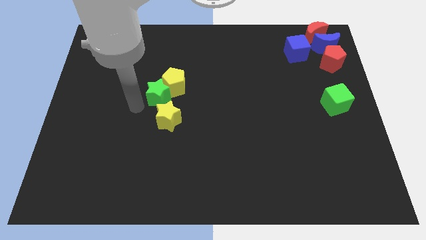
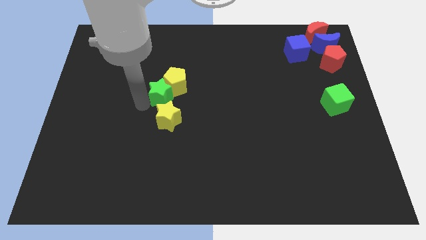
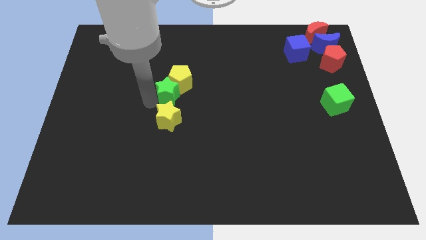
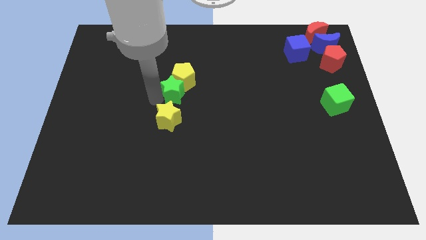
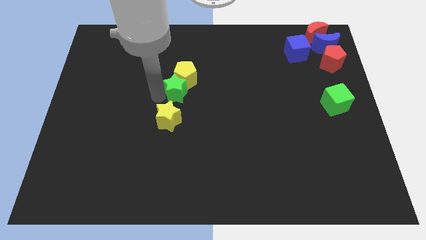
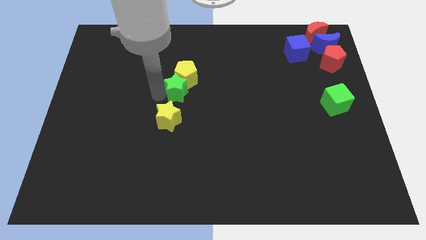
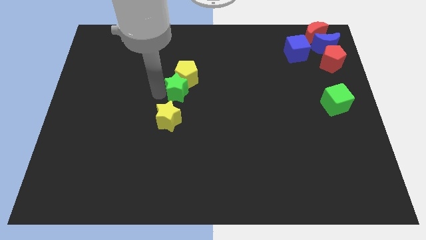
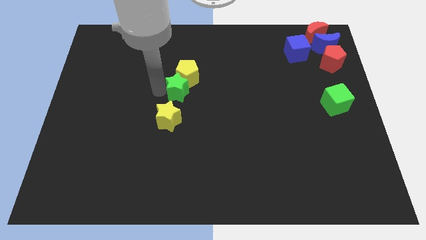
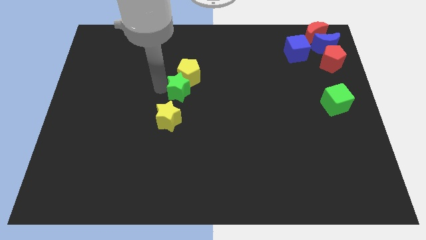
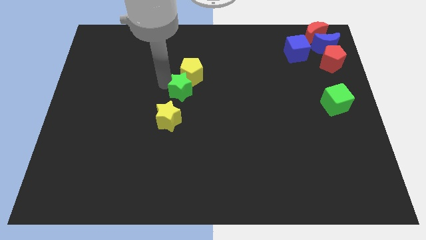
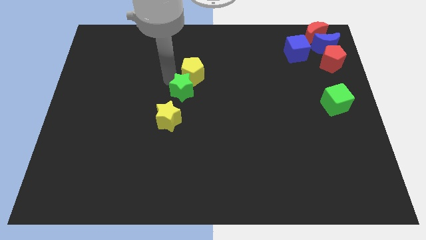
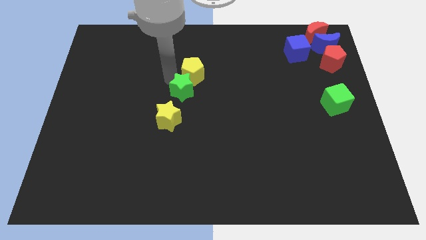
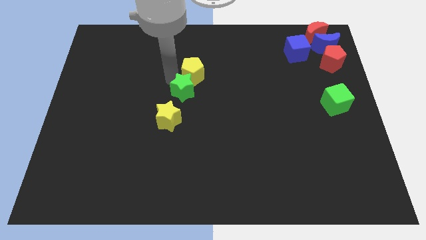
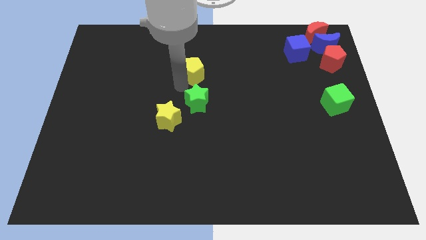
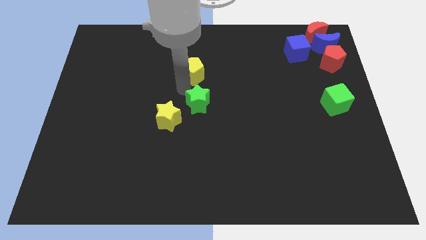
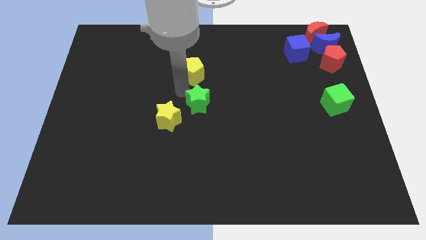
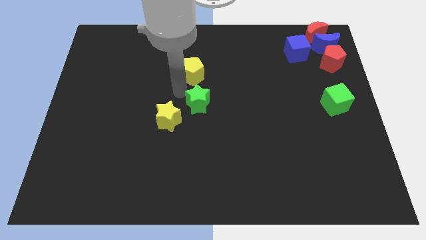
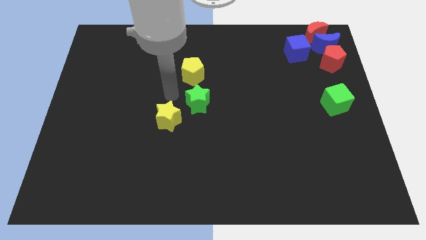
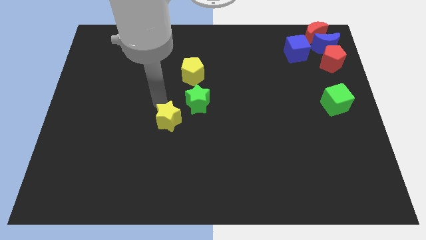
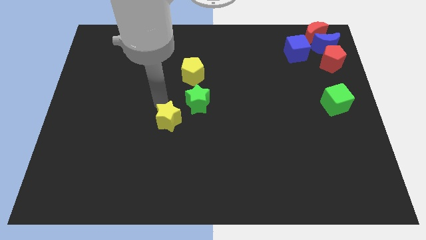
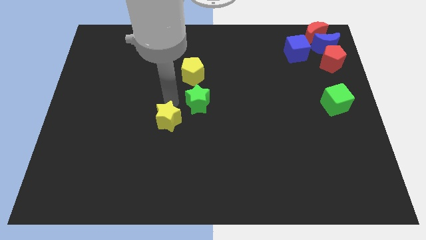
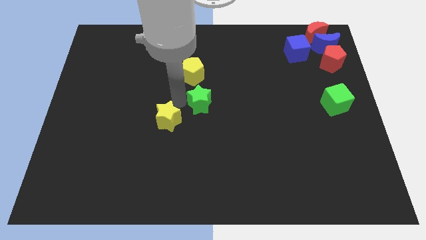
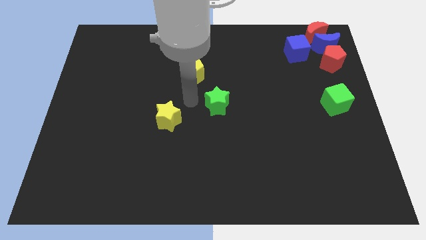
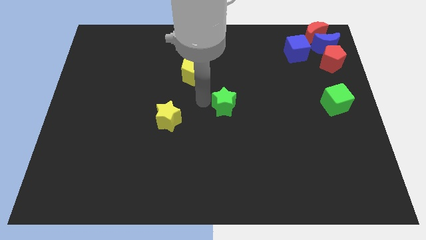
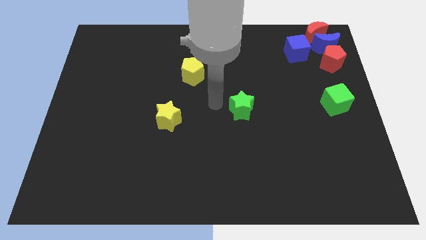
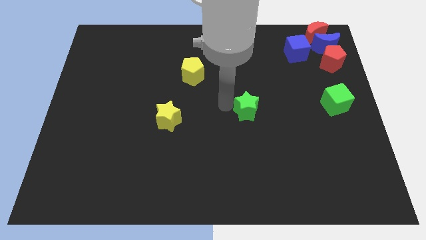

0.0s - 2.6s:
separate the green star from the yellow color blocks

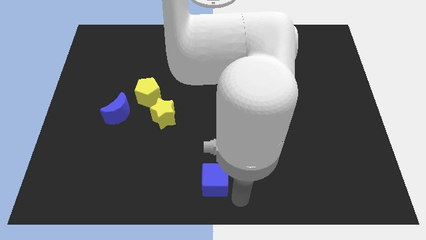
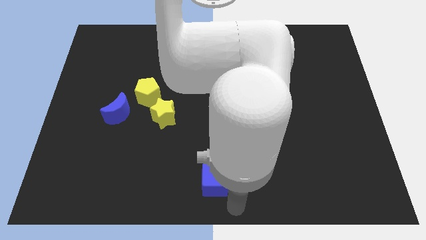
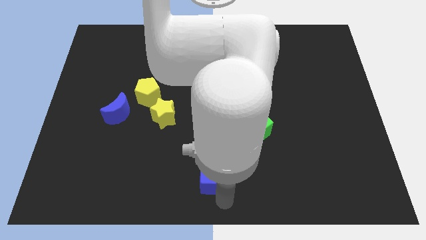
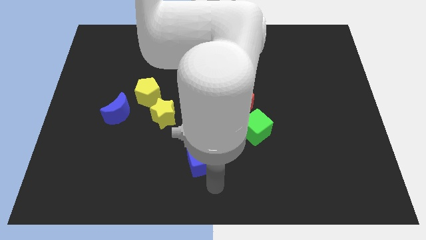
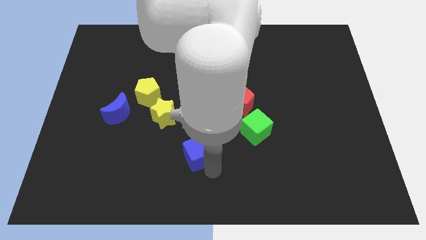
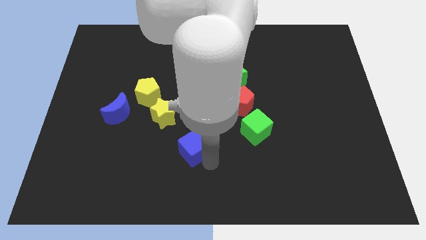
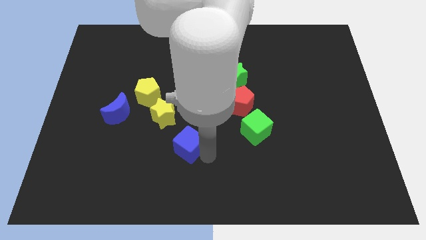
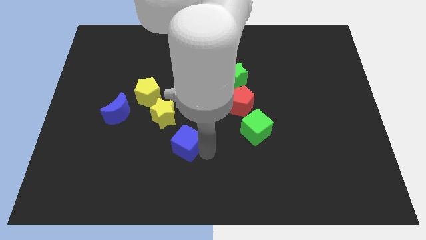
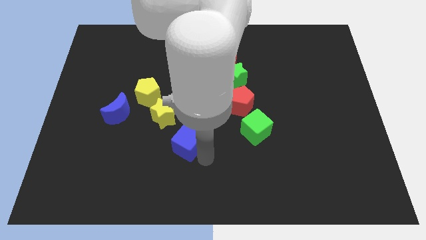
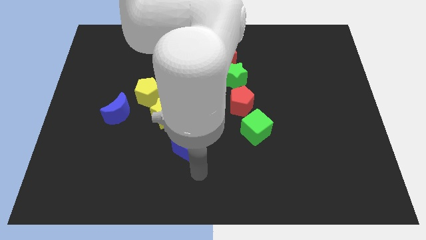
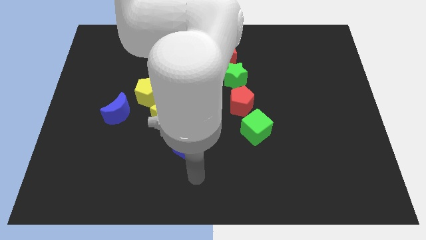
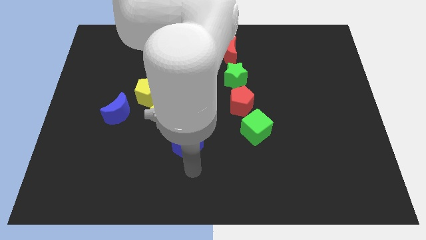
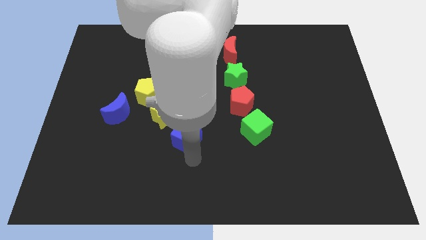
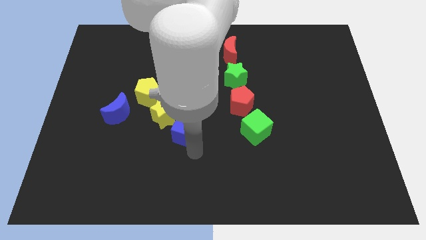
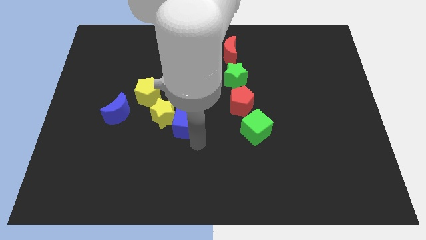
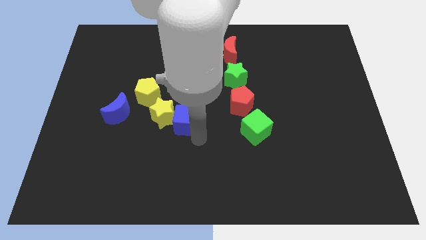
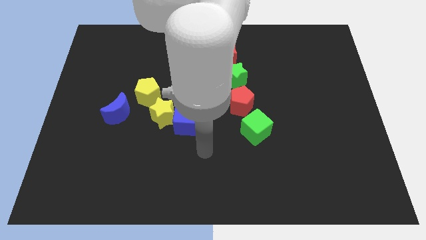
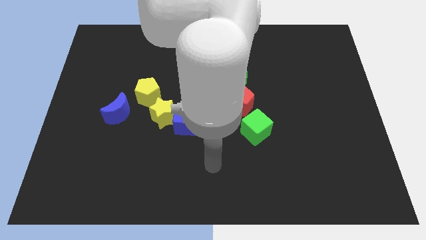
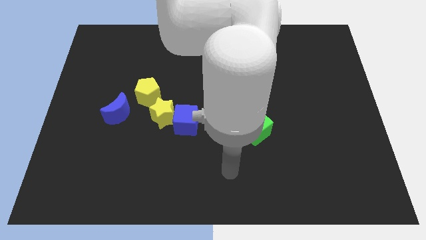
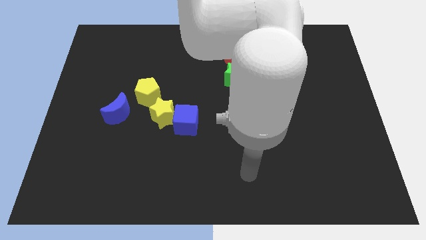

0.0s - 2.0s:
push the blue cube to the right of the yellow star

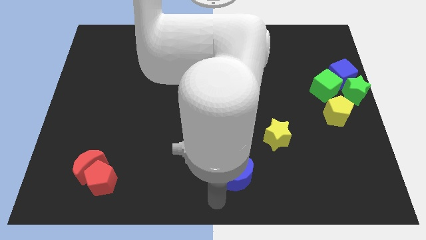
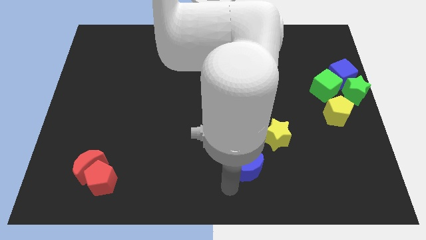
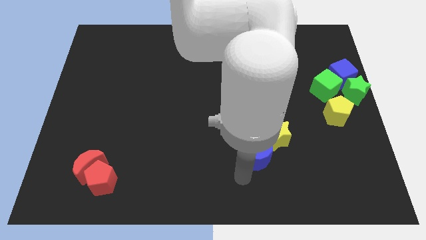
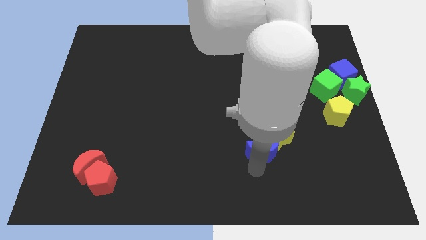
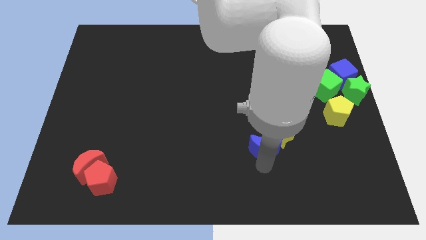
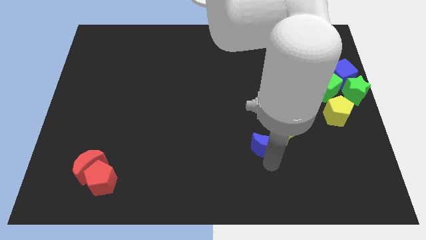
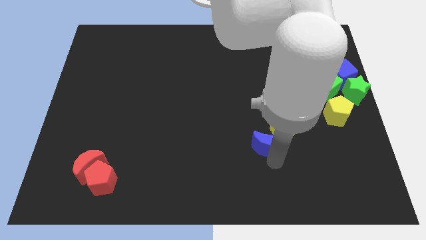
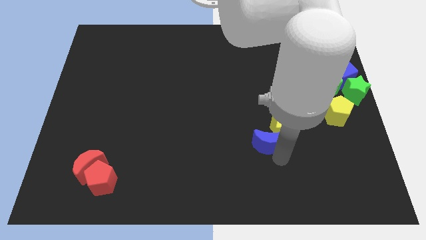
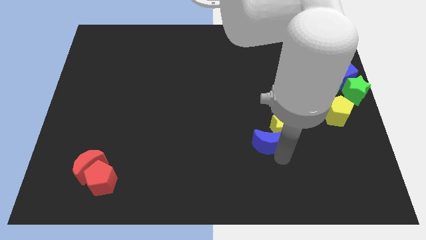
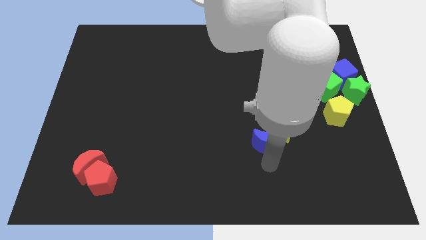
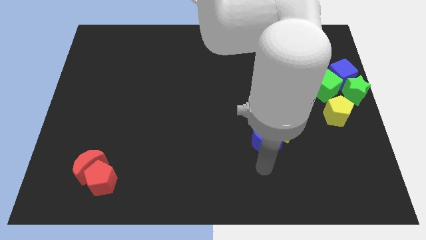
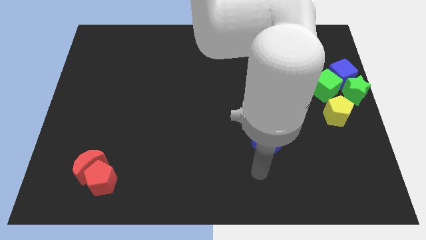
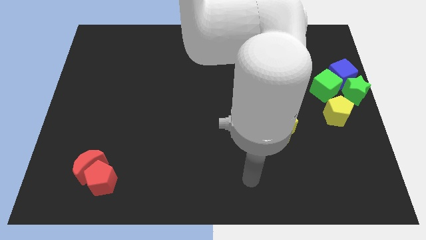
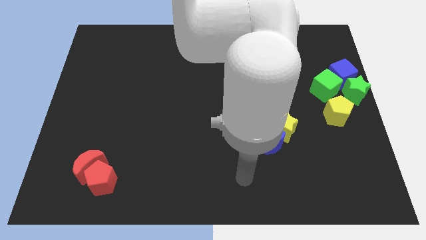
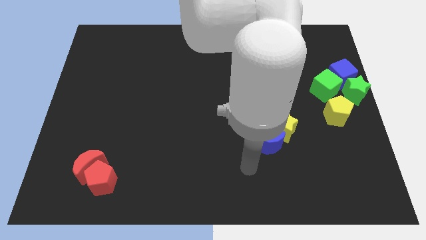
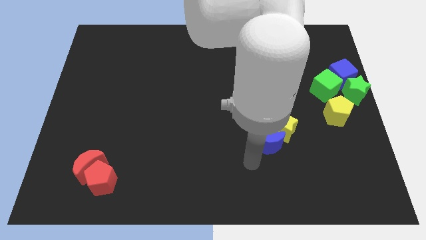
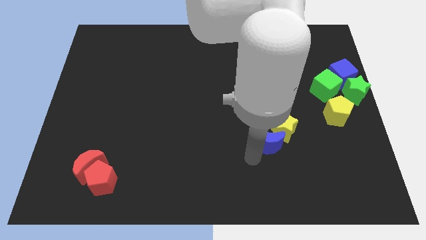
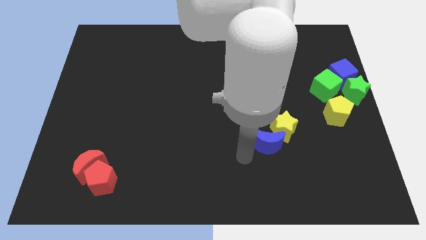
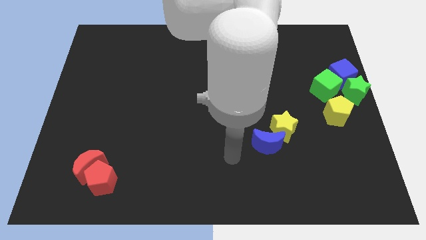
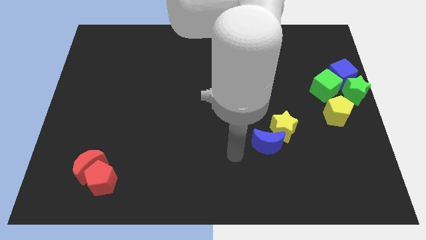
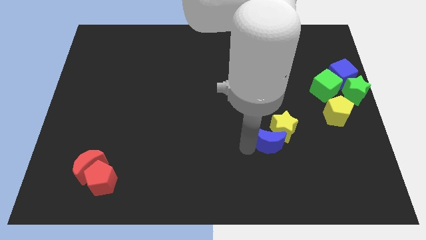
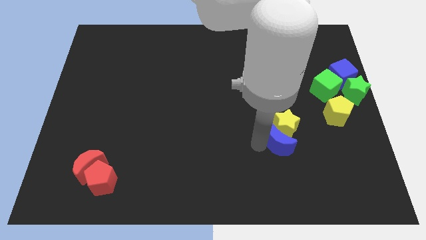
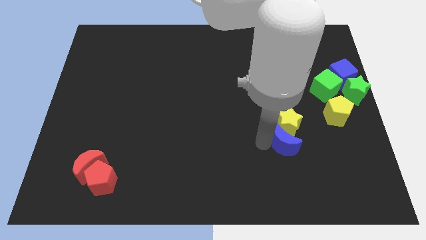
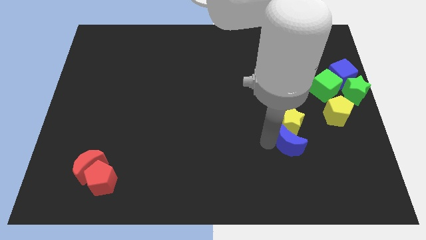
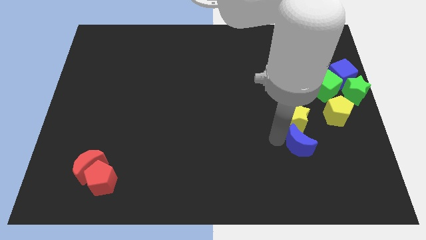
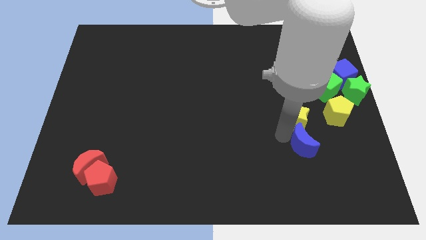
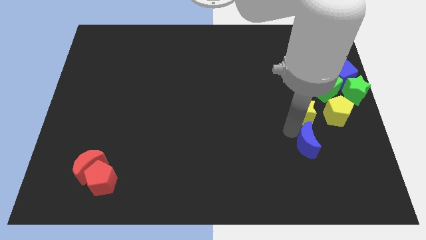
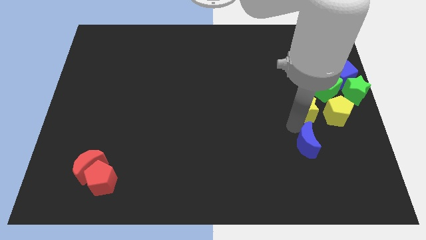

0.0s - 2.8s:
push the yellow star and blue moon towards the yellow pentagon

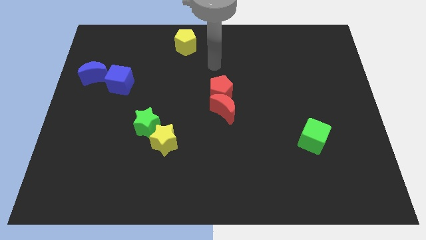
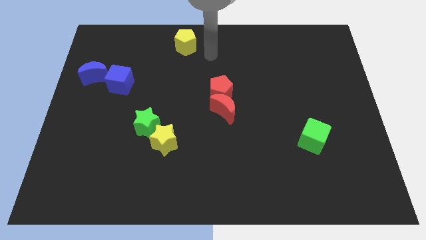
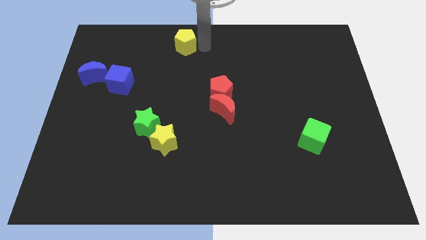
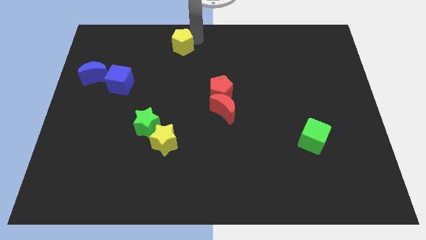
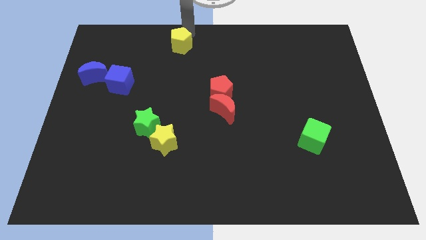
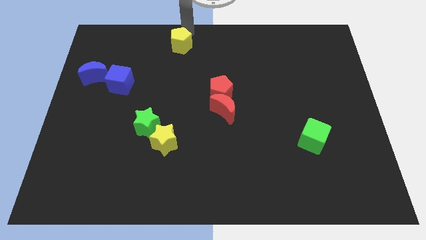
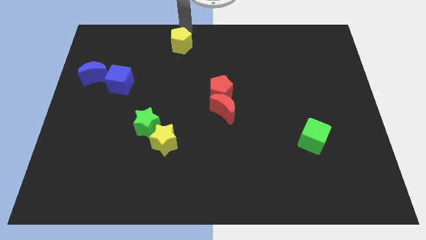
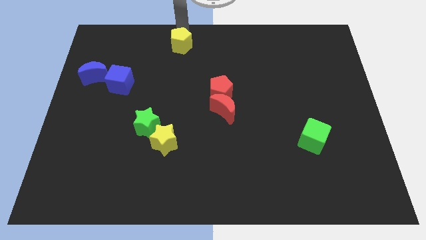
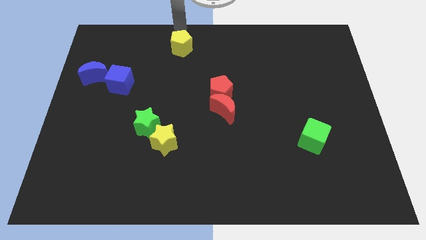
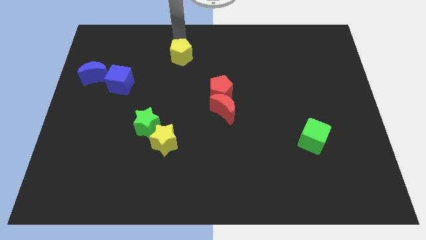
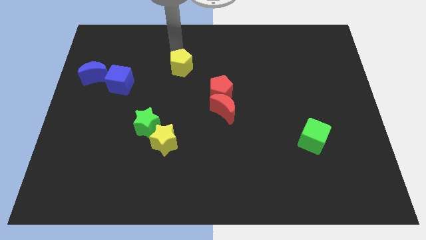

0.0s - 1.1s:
push the yellow pentagon slightly to the bottom

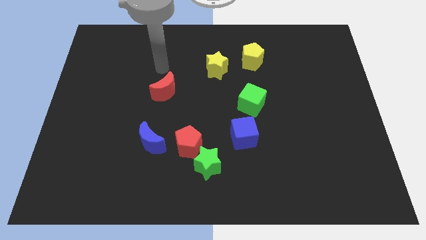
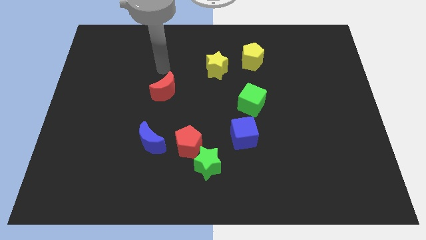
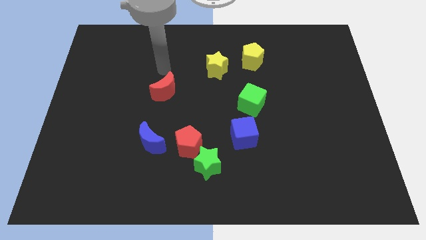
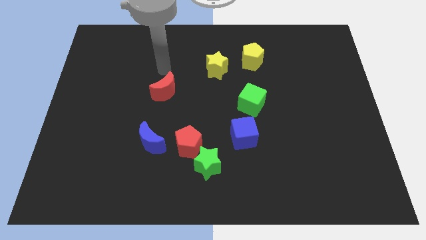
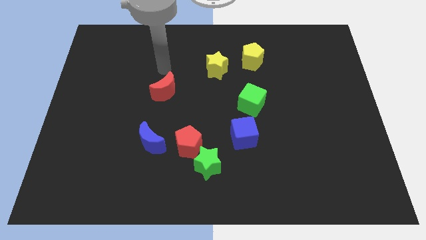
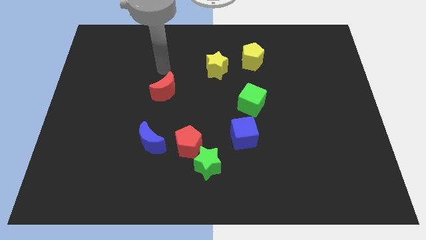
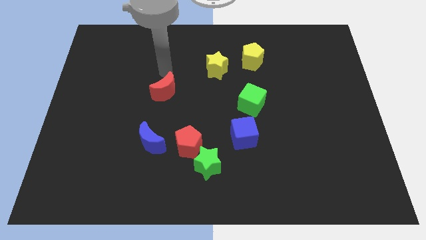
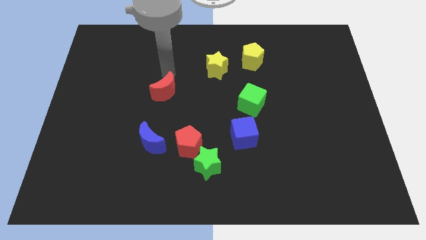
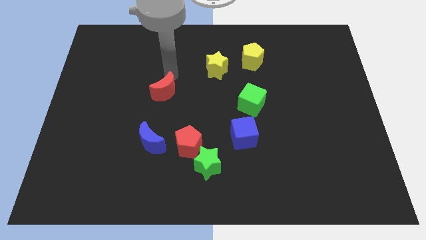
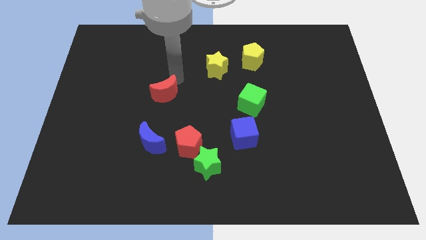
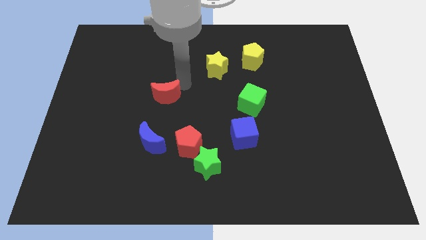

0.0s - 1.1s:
tap the red crescent
